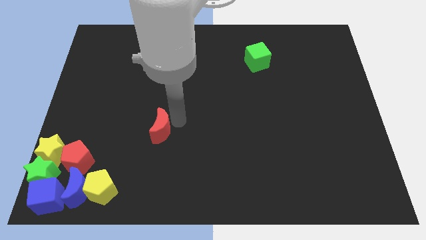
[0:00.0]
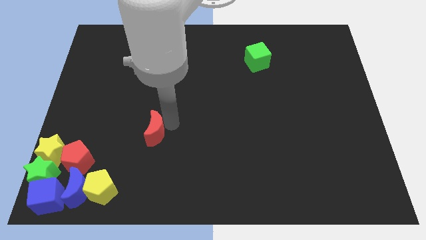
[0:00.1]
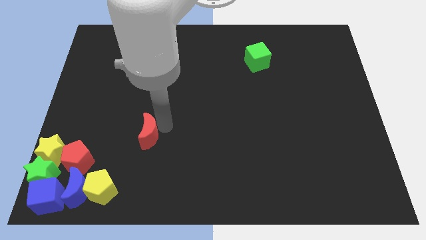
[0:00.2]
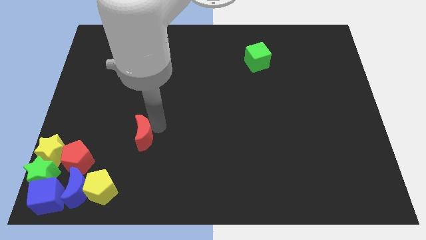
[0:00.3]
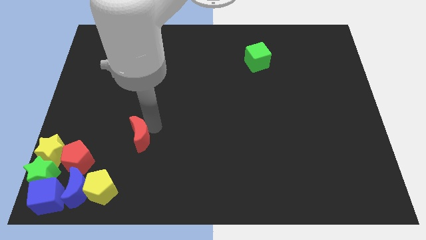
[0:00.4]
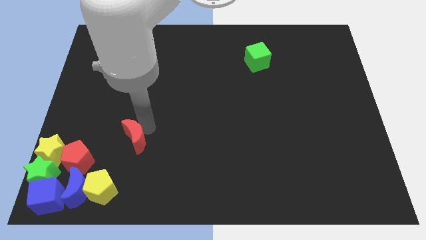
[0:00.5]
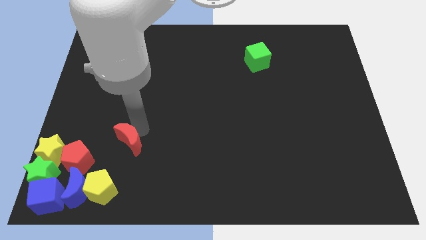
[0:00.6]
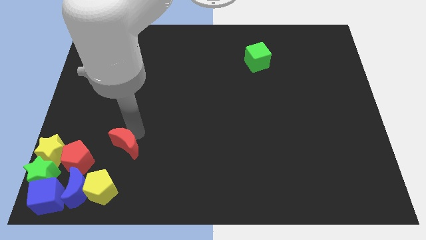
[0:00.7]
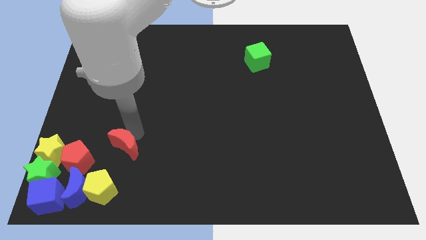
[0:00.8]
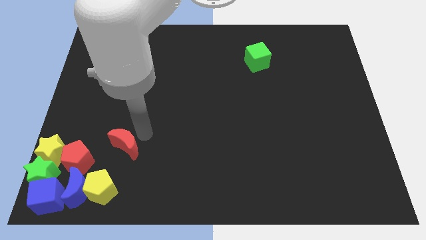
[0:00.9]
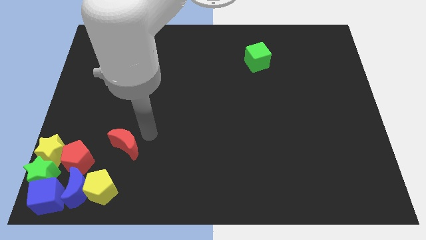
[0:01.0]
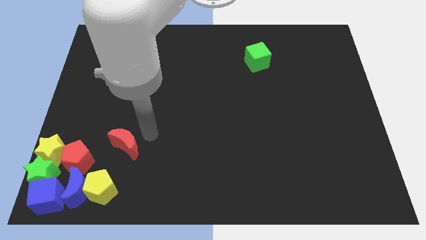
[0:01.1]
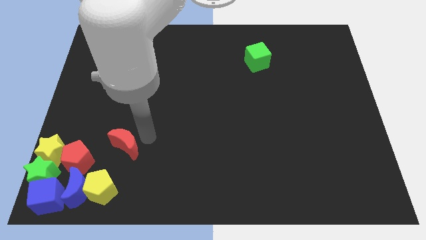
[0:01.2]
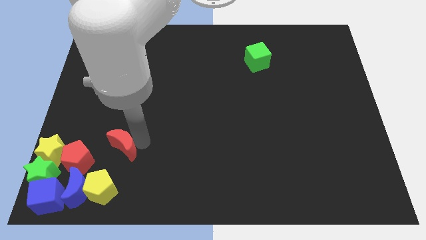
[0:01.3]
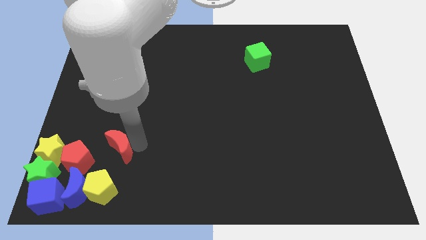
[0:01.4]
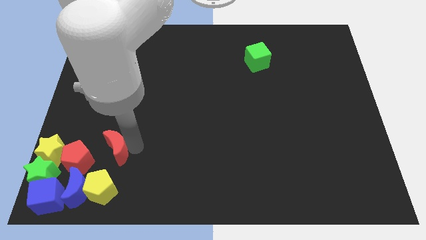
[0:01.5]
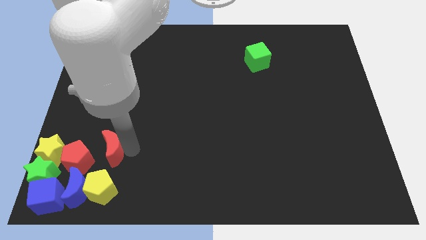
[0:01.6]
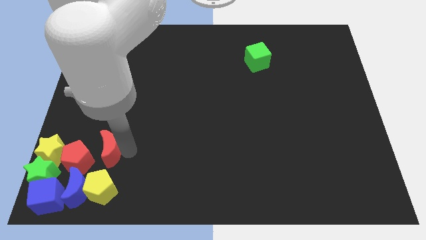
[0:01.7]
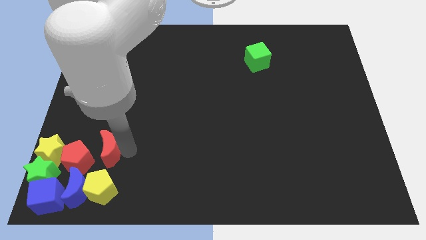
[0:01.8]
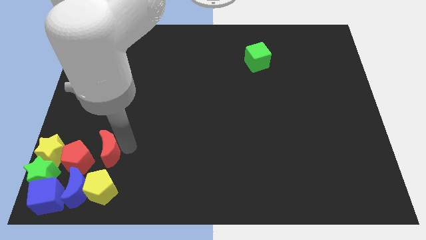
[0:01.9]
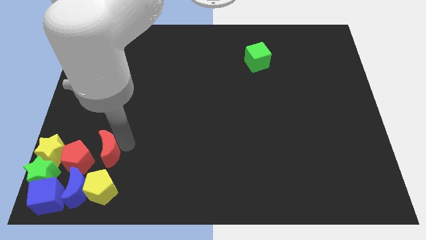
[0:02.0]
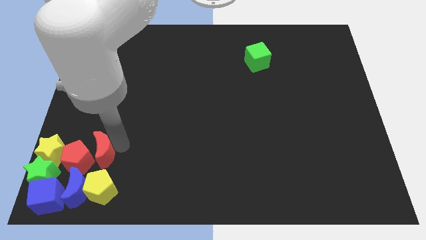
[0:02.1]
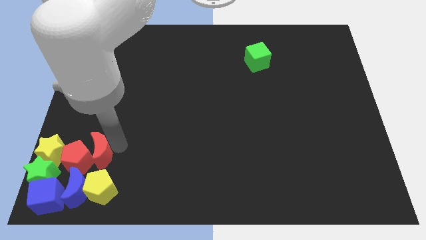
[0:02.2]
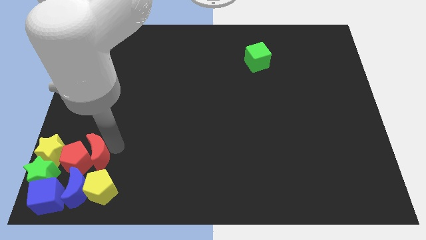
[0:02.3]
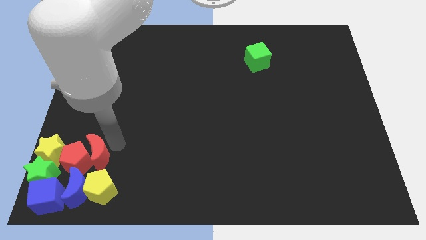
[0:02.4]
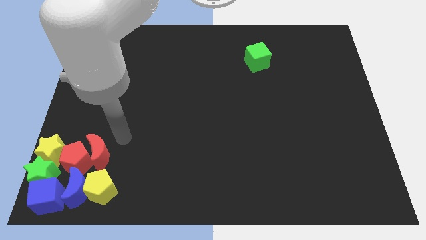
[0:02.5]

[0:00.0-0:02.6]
place red crescent above yellow pentagon

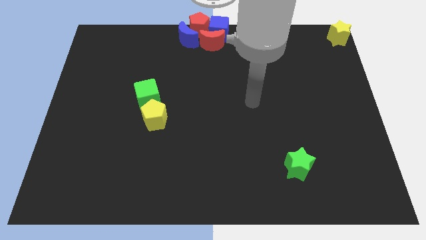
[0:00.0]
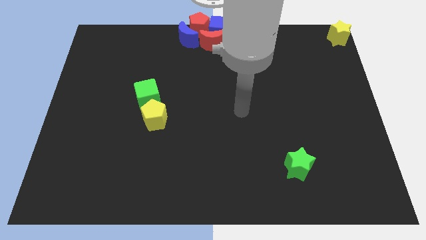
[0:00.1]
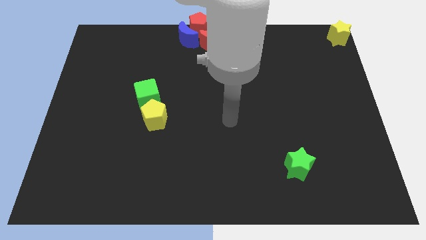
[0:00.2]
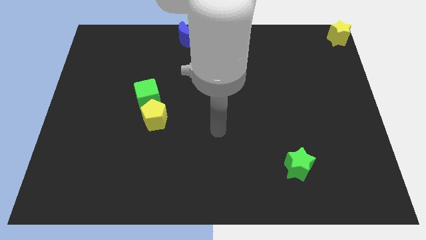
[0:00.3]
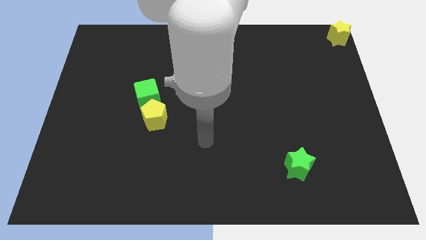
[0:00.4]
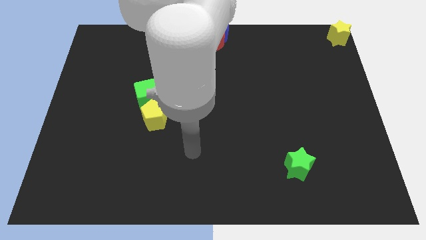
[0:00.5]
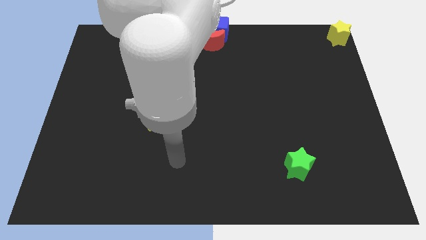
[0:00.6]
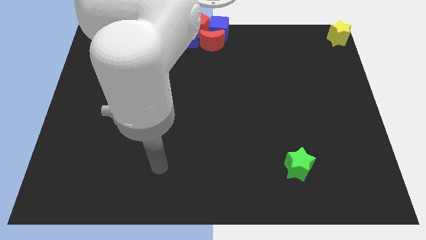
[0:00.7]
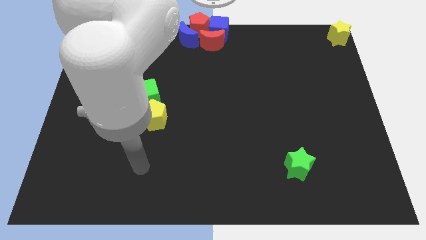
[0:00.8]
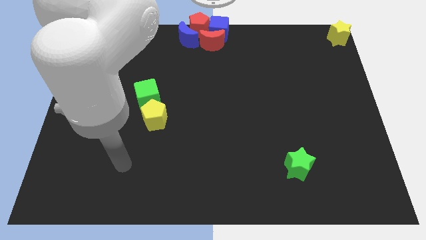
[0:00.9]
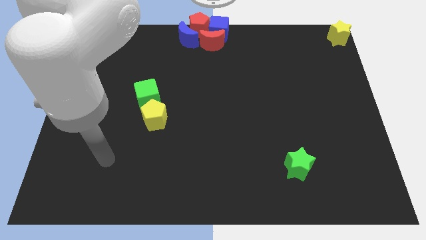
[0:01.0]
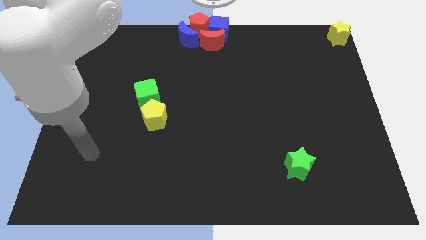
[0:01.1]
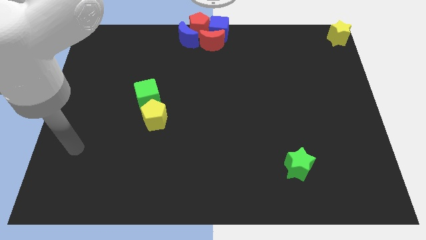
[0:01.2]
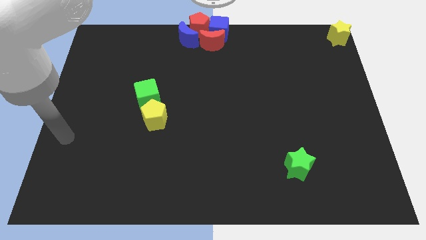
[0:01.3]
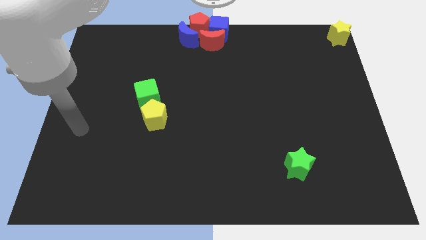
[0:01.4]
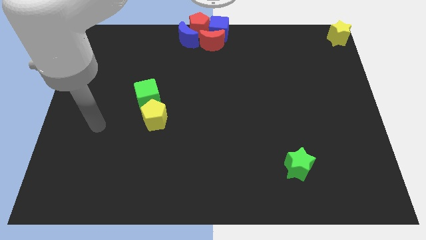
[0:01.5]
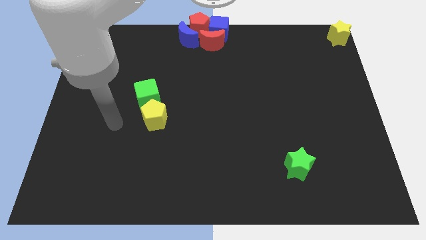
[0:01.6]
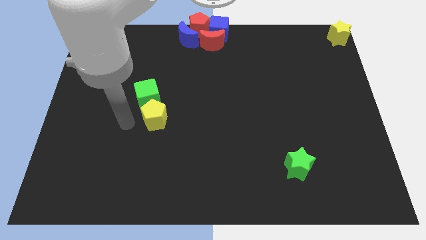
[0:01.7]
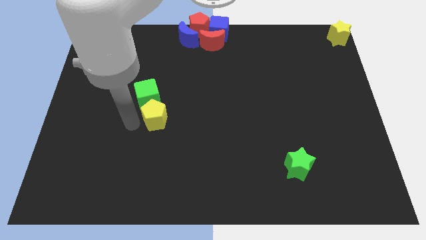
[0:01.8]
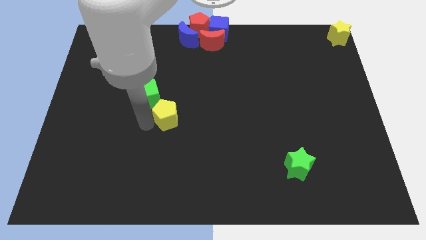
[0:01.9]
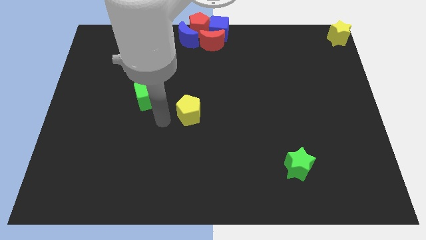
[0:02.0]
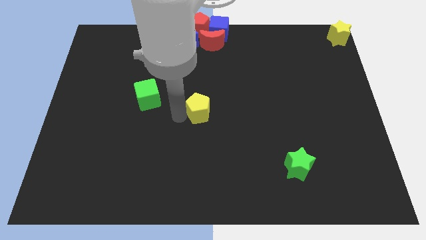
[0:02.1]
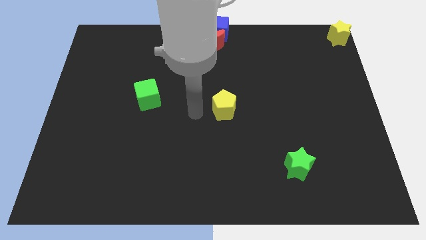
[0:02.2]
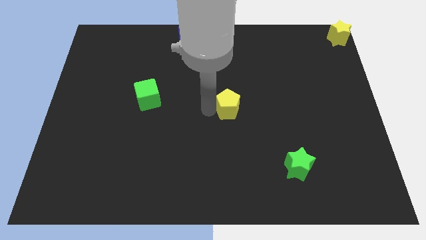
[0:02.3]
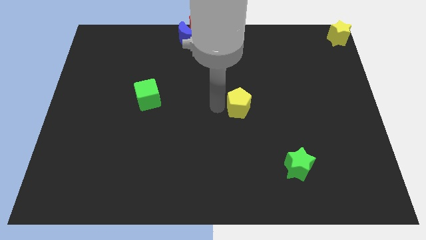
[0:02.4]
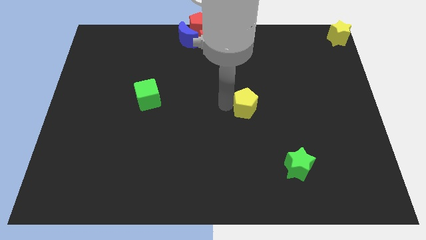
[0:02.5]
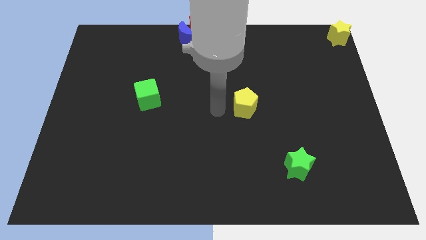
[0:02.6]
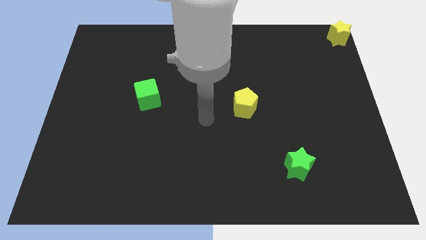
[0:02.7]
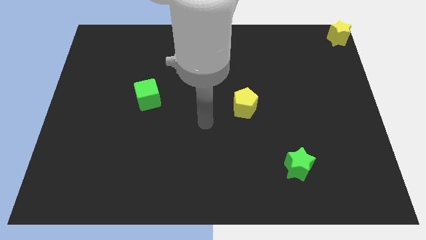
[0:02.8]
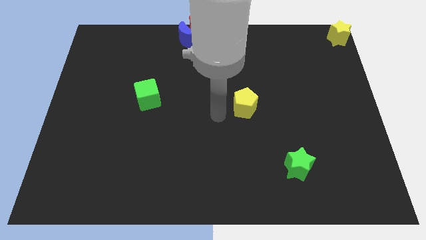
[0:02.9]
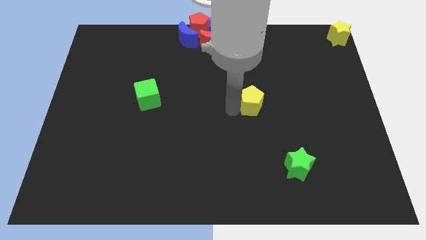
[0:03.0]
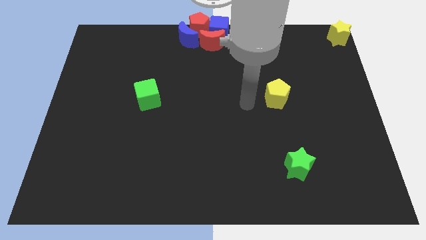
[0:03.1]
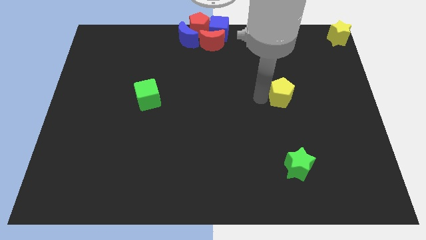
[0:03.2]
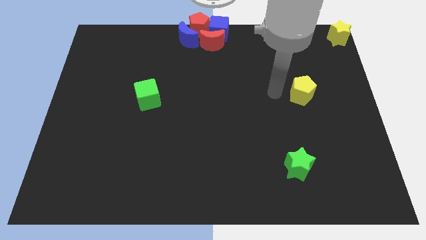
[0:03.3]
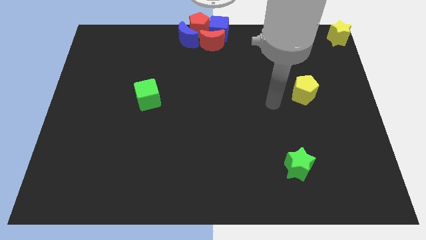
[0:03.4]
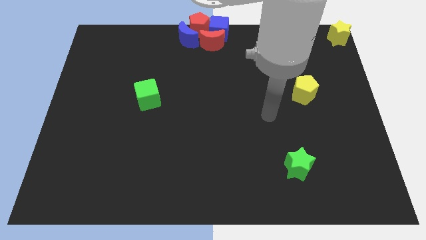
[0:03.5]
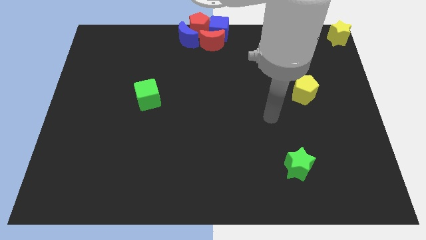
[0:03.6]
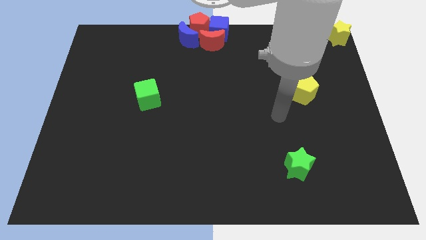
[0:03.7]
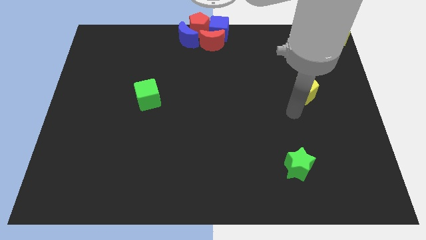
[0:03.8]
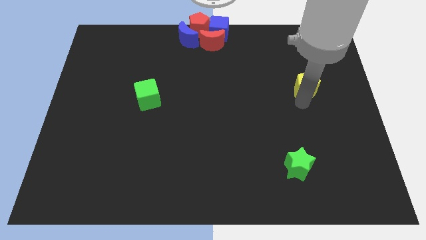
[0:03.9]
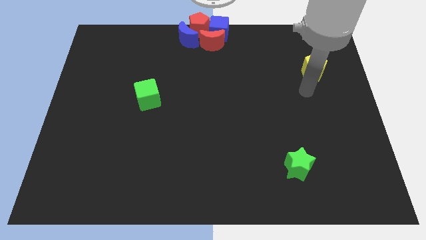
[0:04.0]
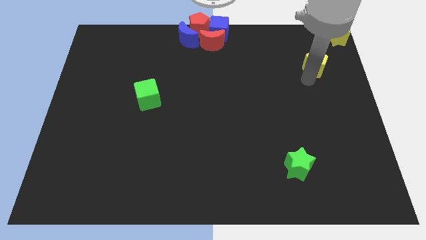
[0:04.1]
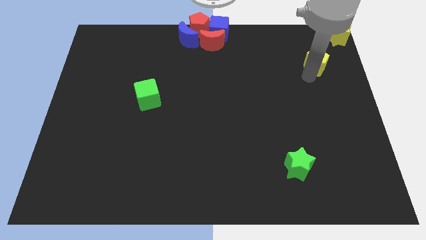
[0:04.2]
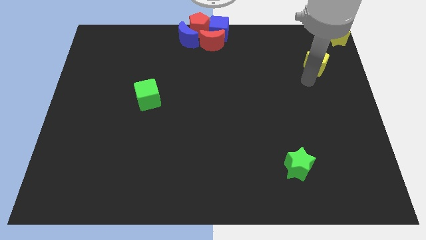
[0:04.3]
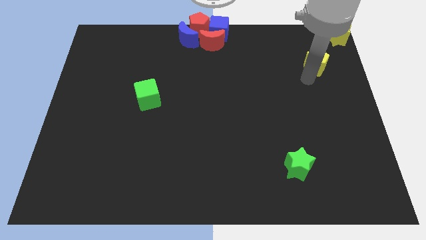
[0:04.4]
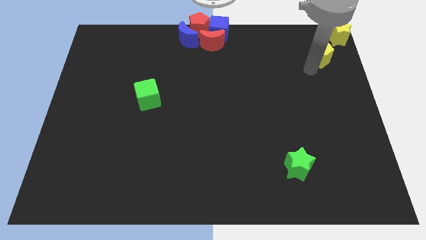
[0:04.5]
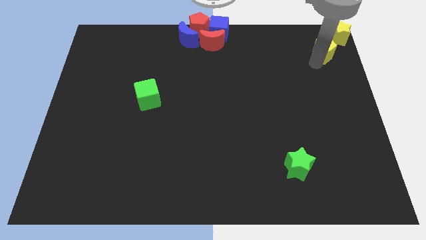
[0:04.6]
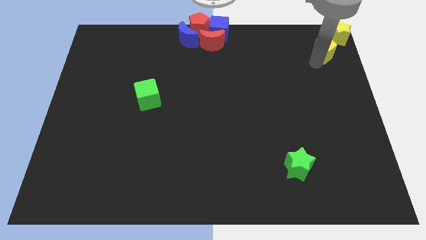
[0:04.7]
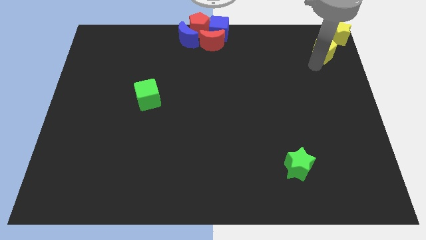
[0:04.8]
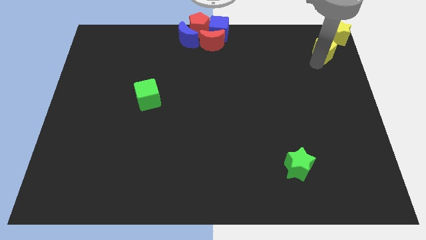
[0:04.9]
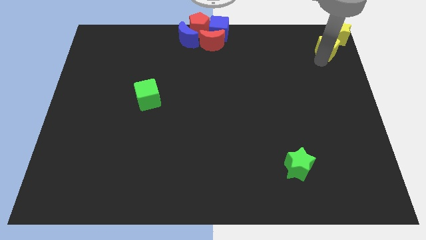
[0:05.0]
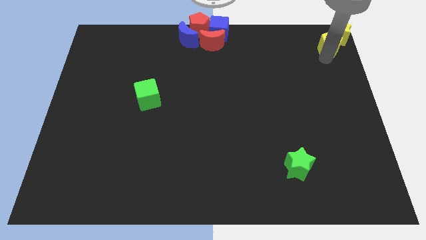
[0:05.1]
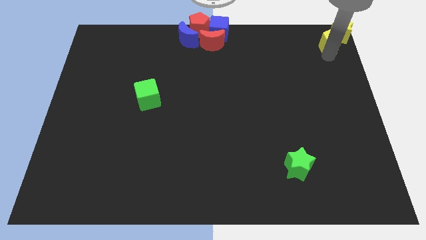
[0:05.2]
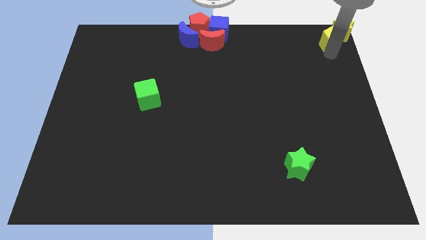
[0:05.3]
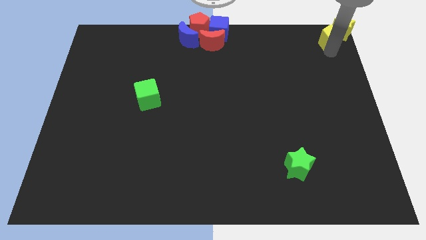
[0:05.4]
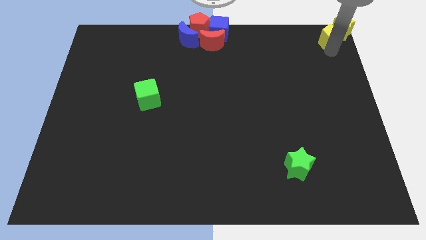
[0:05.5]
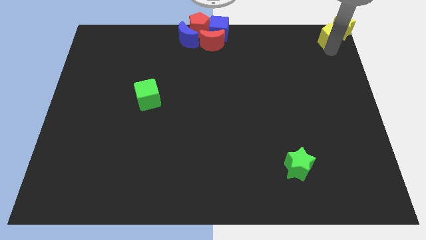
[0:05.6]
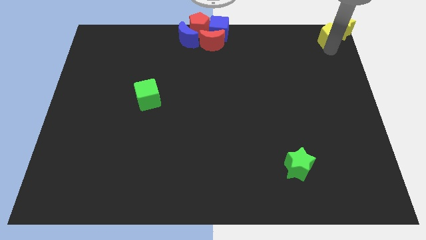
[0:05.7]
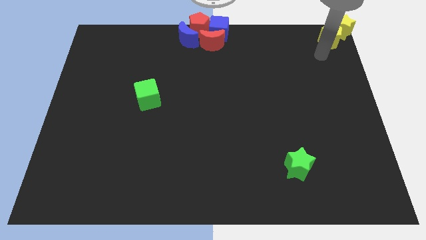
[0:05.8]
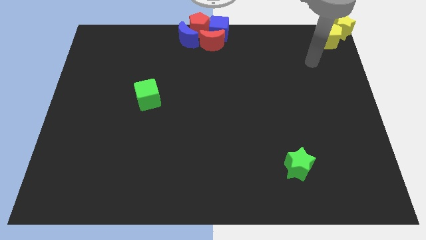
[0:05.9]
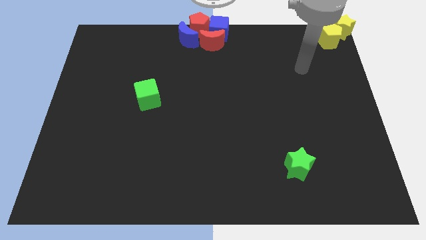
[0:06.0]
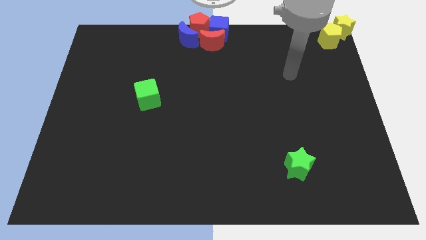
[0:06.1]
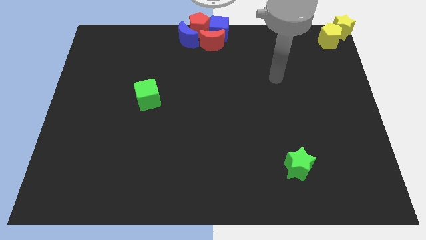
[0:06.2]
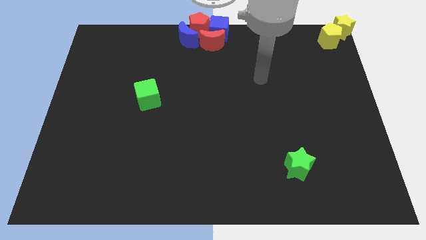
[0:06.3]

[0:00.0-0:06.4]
push the yellow pentagon diagonally left to the yellow star
